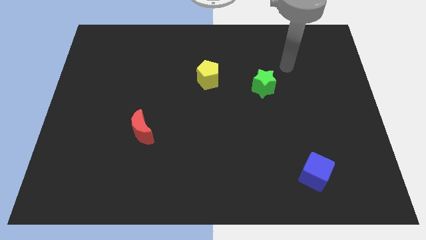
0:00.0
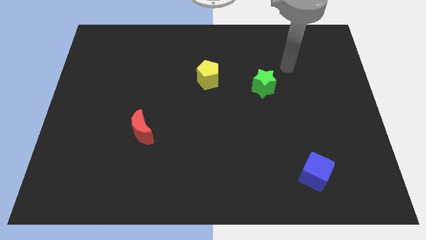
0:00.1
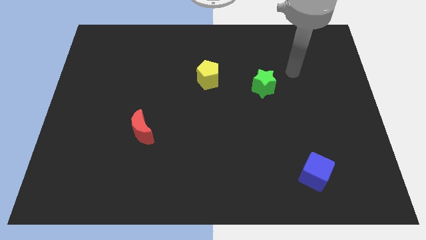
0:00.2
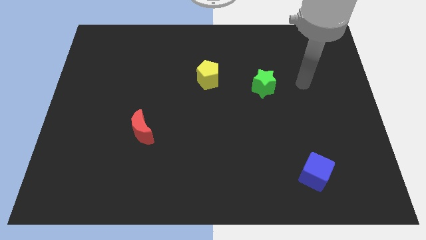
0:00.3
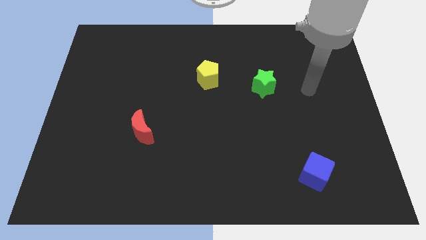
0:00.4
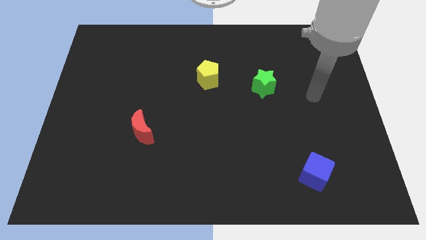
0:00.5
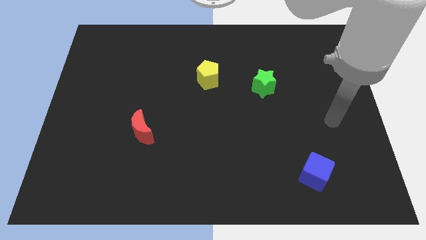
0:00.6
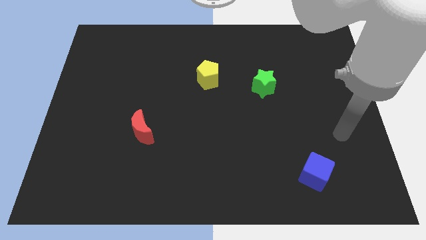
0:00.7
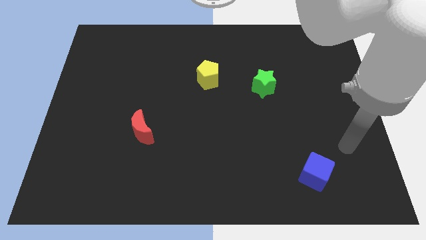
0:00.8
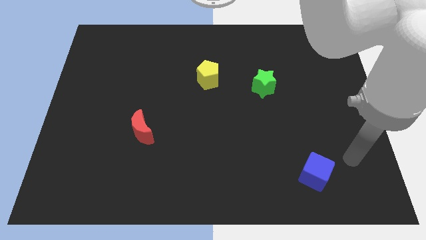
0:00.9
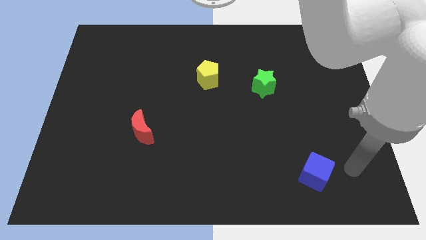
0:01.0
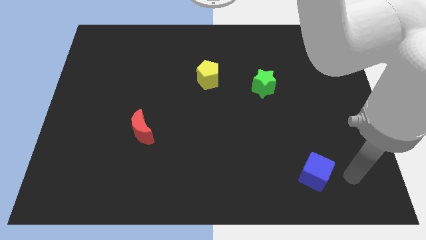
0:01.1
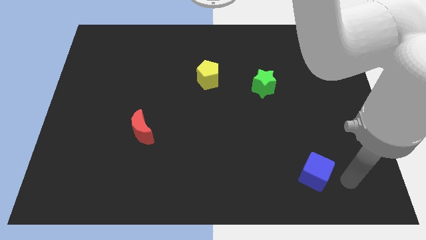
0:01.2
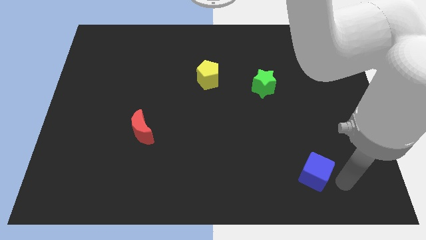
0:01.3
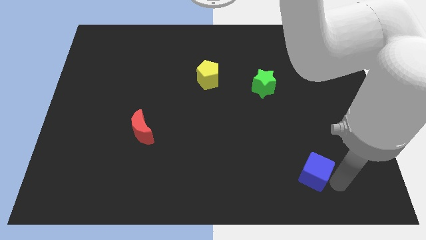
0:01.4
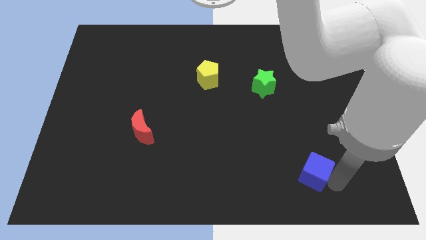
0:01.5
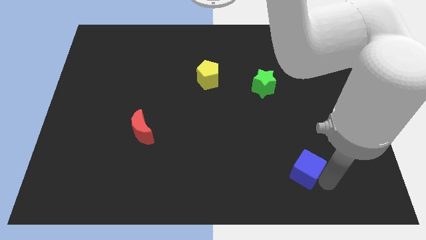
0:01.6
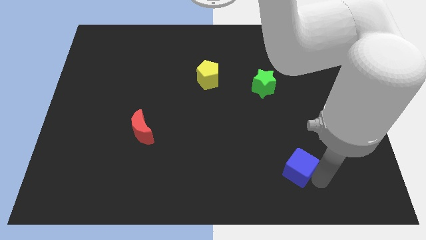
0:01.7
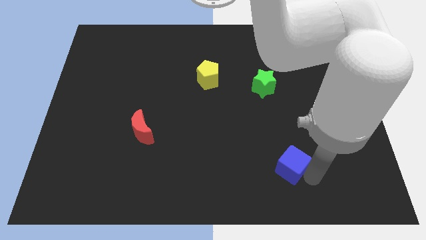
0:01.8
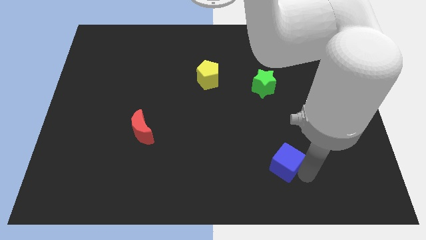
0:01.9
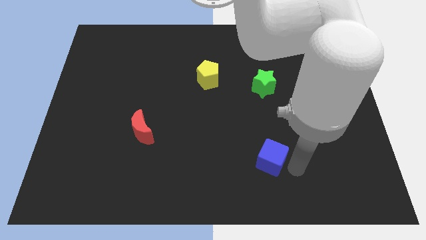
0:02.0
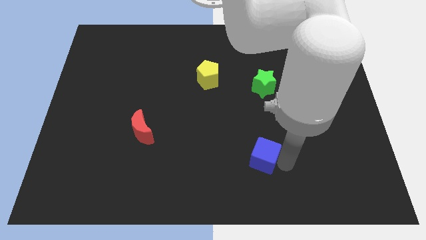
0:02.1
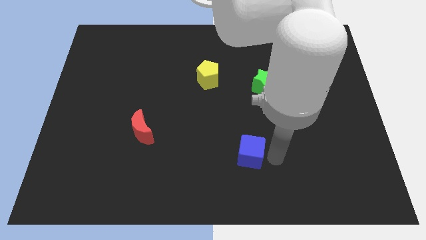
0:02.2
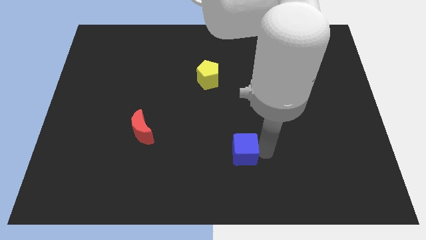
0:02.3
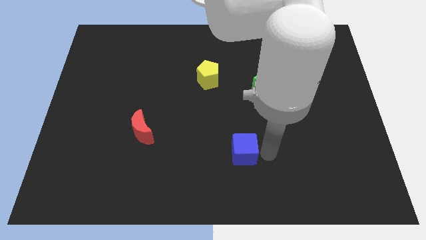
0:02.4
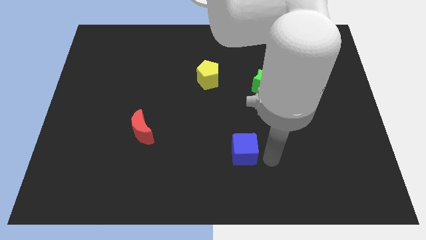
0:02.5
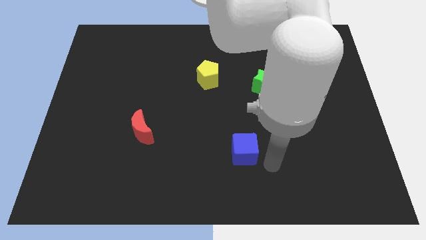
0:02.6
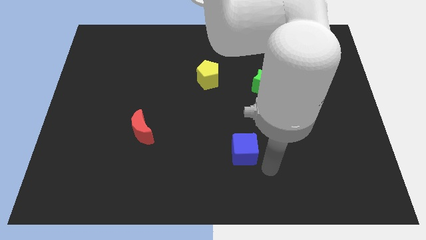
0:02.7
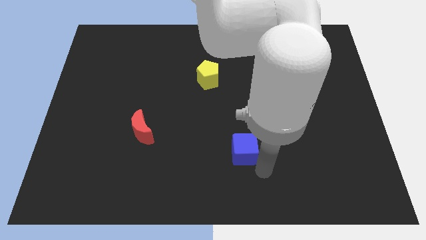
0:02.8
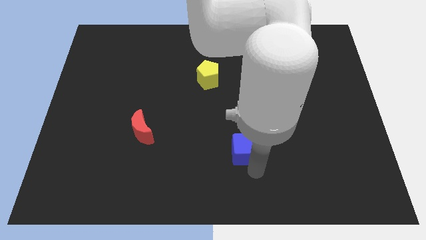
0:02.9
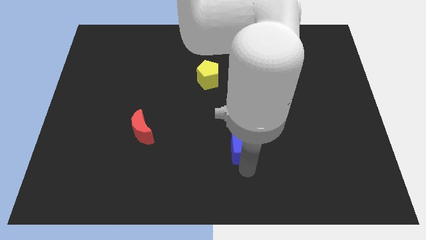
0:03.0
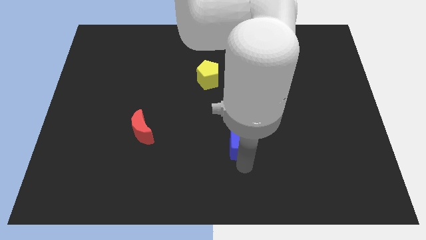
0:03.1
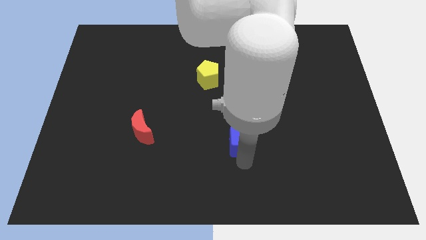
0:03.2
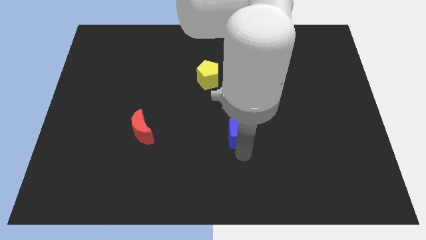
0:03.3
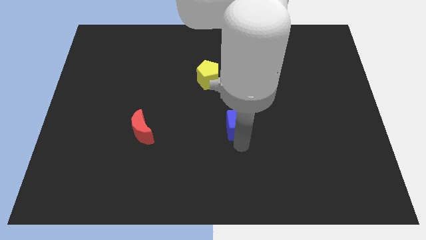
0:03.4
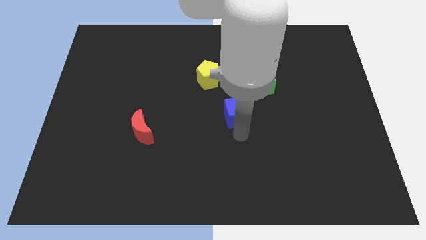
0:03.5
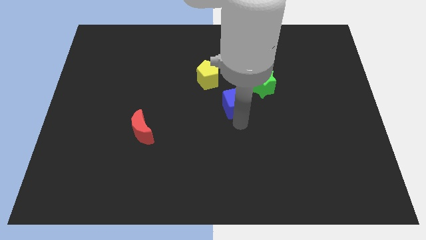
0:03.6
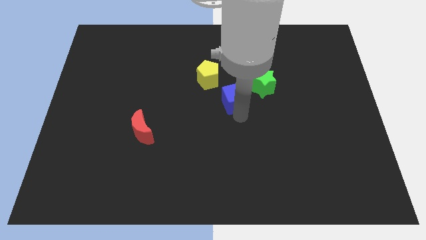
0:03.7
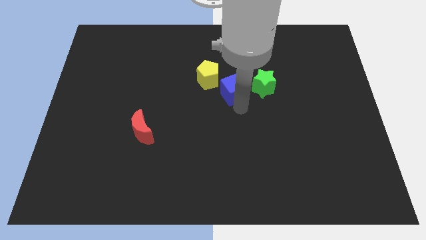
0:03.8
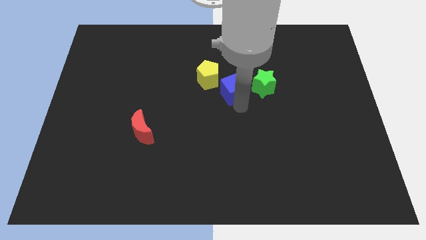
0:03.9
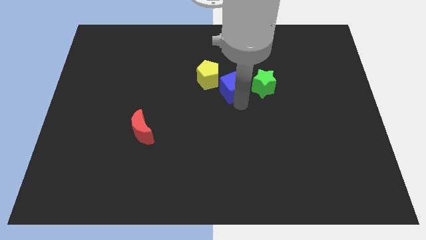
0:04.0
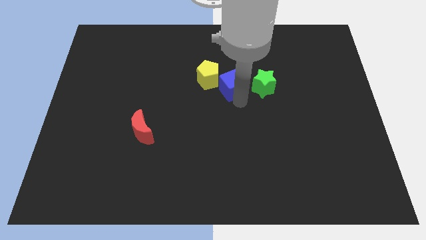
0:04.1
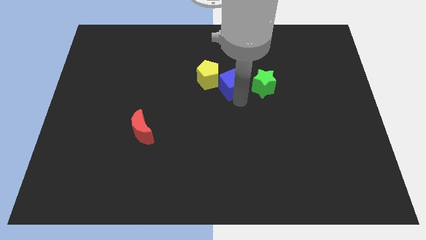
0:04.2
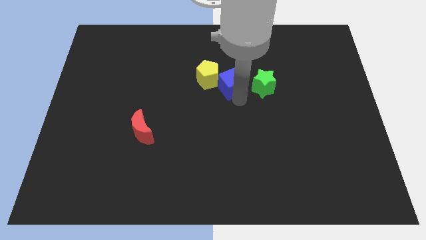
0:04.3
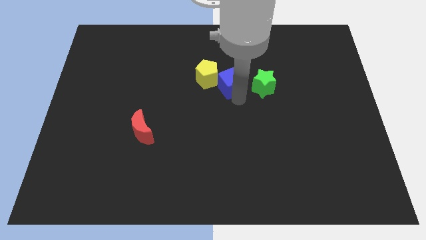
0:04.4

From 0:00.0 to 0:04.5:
put the blue cube to the pentagon

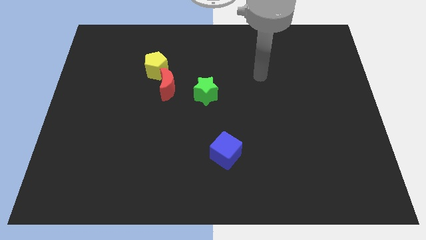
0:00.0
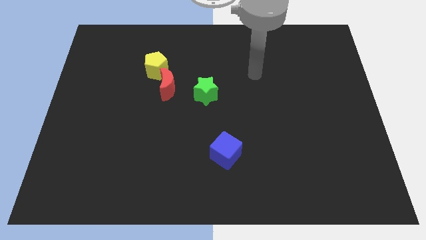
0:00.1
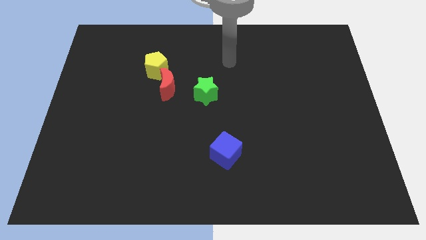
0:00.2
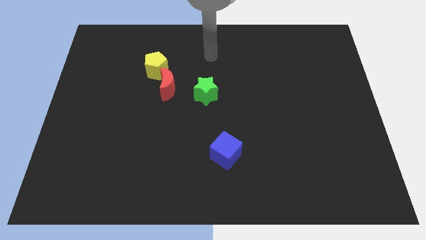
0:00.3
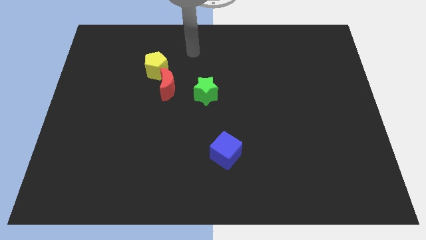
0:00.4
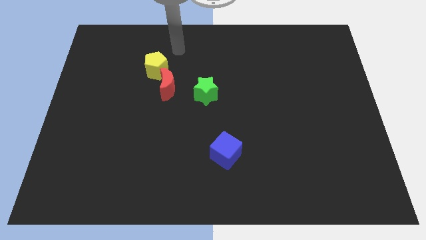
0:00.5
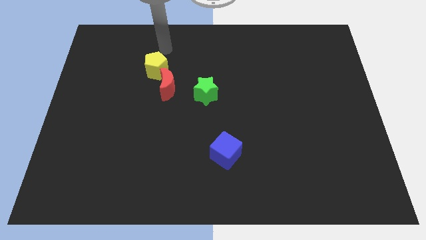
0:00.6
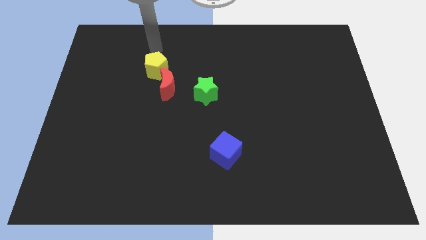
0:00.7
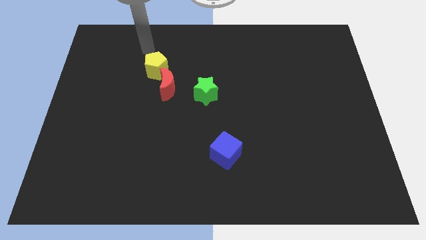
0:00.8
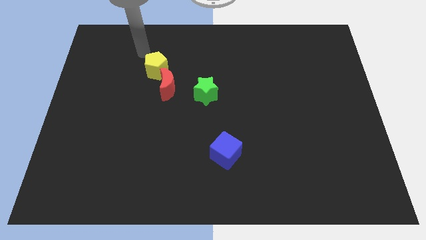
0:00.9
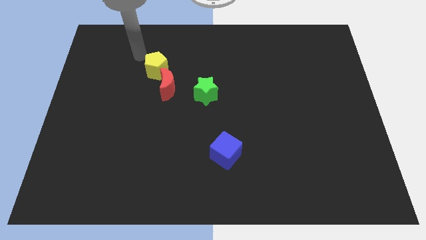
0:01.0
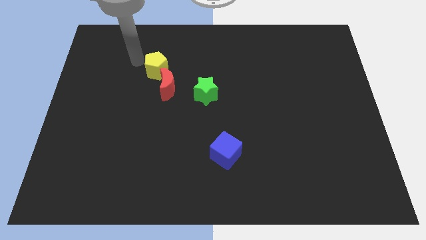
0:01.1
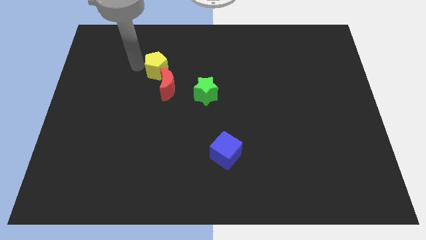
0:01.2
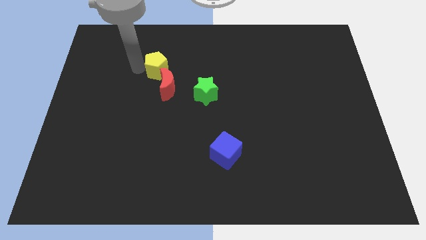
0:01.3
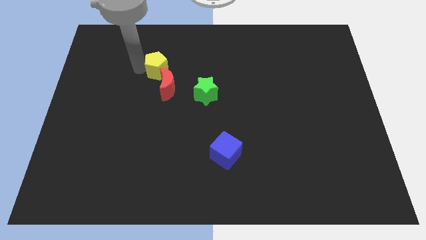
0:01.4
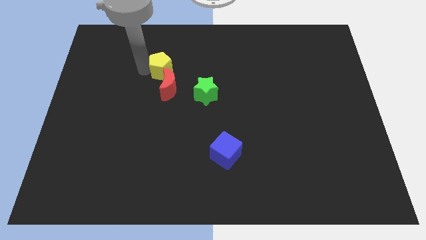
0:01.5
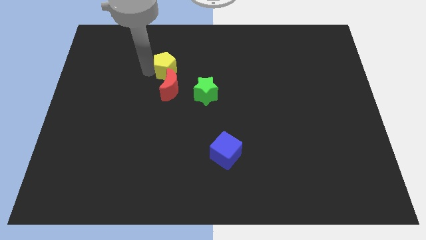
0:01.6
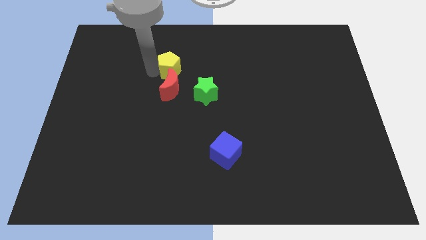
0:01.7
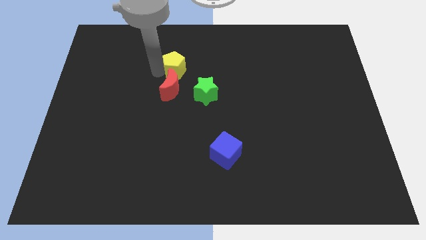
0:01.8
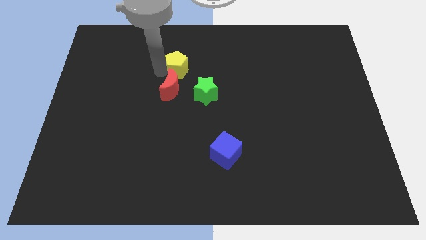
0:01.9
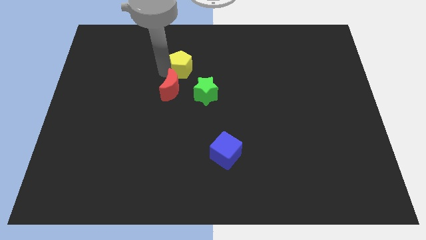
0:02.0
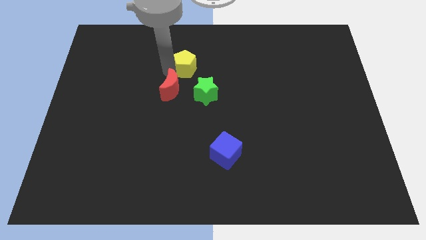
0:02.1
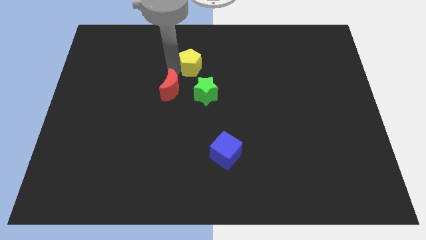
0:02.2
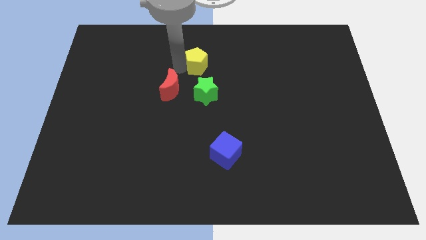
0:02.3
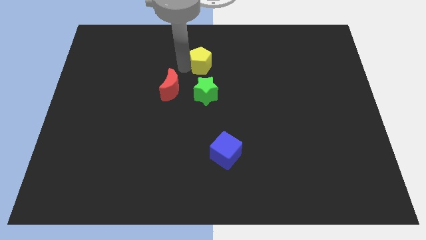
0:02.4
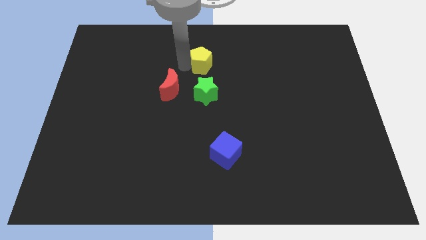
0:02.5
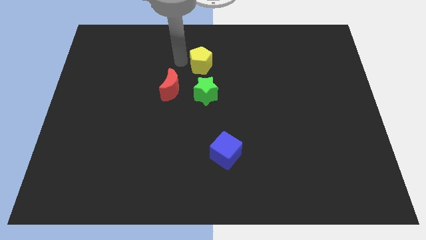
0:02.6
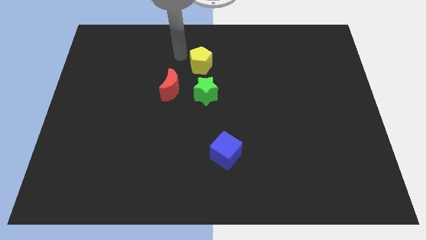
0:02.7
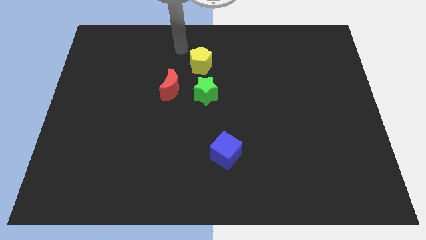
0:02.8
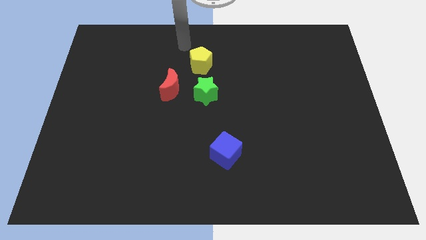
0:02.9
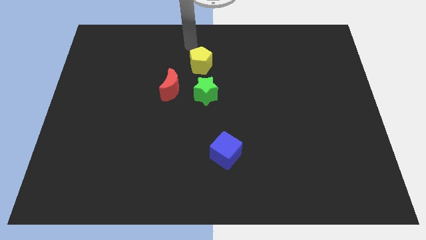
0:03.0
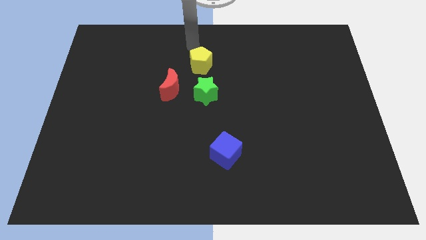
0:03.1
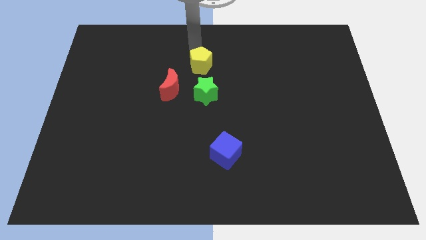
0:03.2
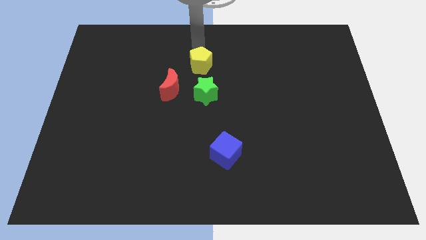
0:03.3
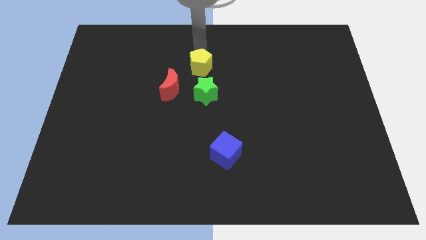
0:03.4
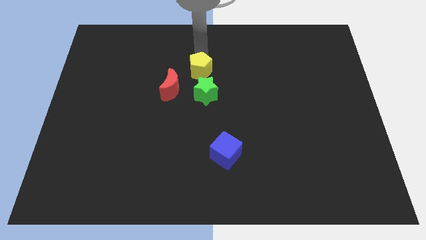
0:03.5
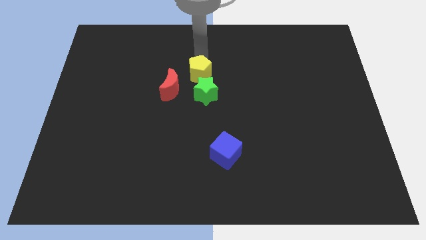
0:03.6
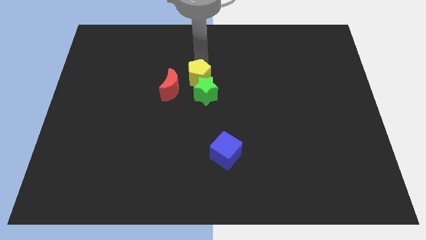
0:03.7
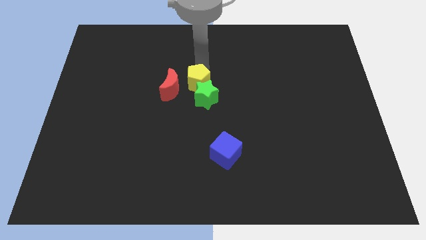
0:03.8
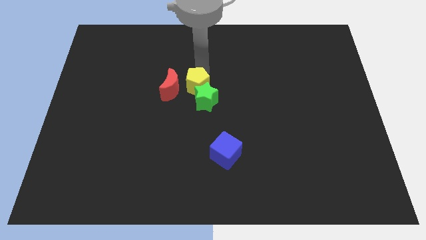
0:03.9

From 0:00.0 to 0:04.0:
put the yellow block to the star
